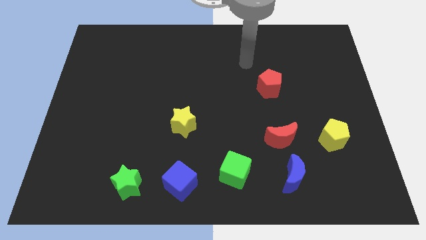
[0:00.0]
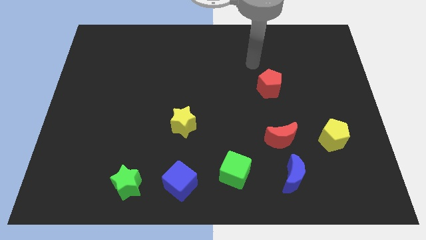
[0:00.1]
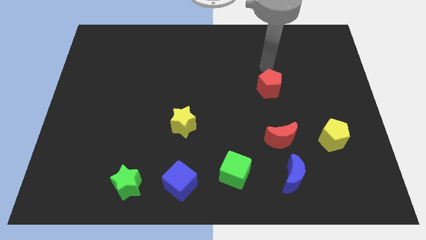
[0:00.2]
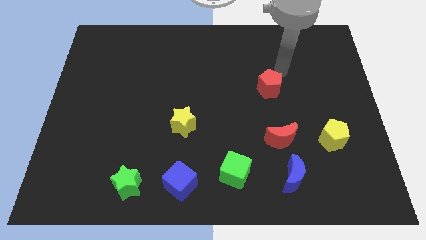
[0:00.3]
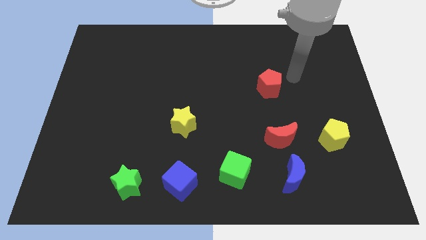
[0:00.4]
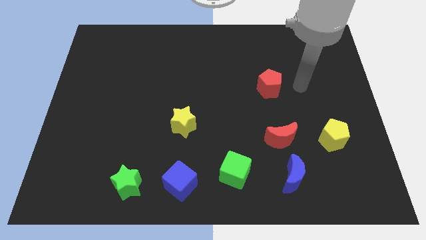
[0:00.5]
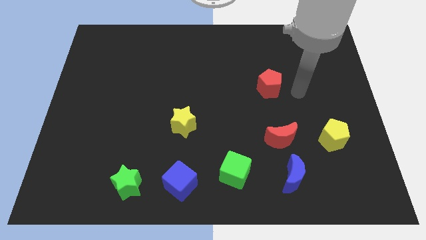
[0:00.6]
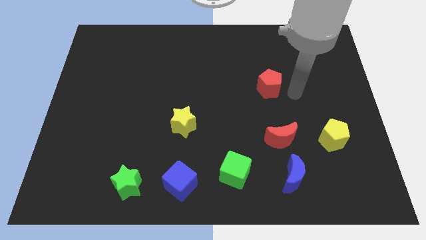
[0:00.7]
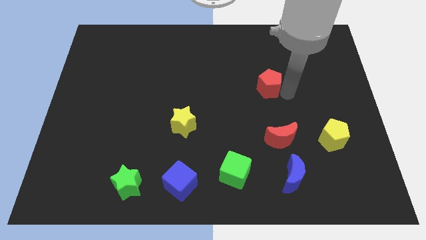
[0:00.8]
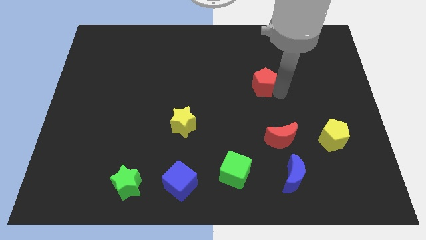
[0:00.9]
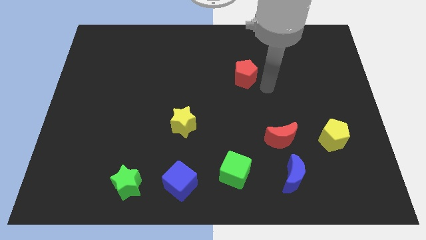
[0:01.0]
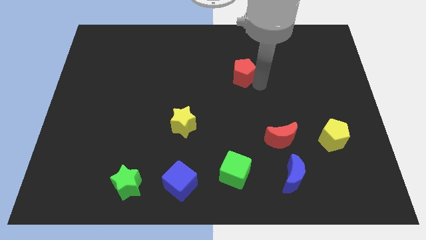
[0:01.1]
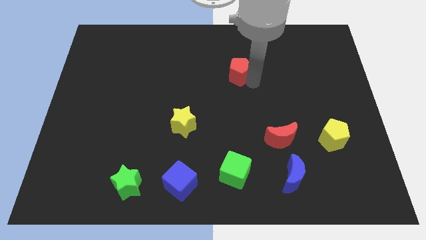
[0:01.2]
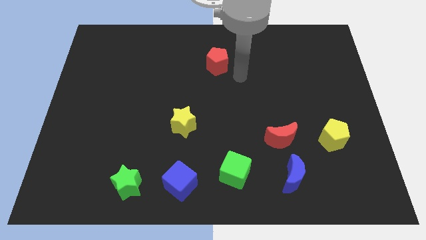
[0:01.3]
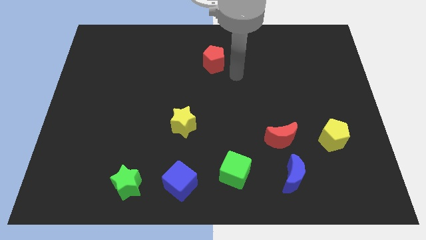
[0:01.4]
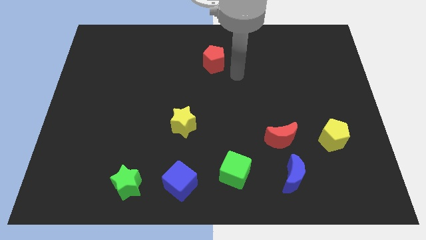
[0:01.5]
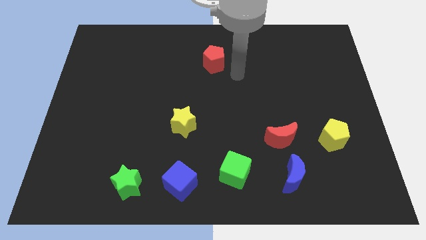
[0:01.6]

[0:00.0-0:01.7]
move the red pentagon towards the top center of the board

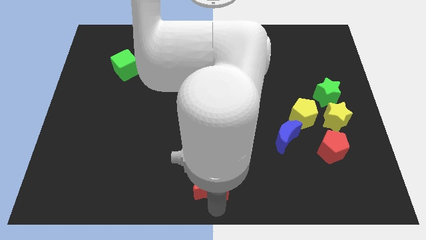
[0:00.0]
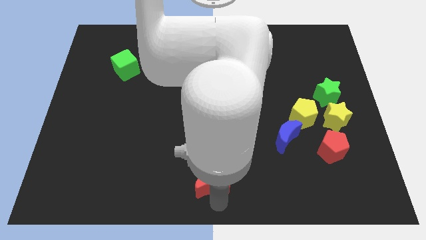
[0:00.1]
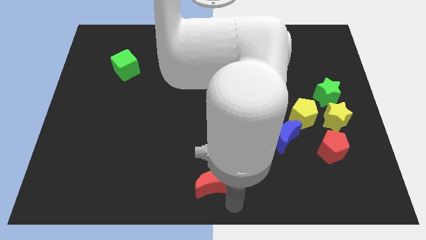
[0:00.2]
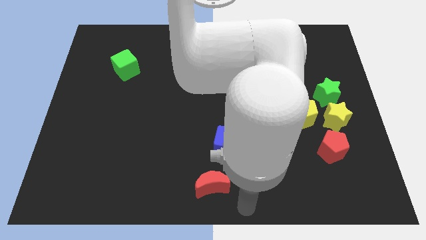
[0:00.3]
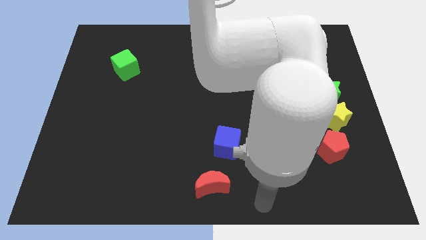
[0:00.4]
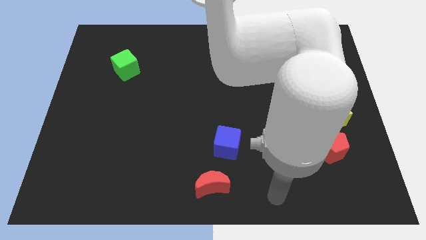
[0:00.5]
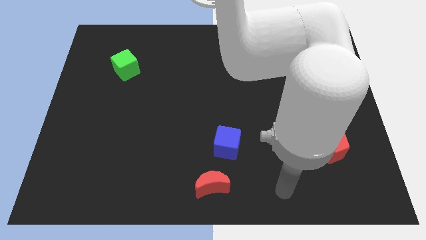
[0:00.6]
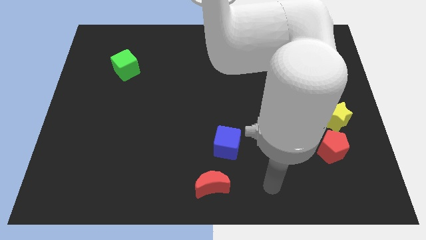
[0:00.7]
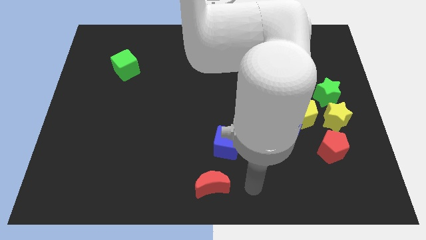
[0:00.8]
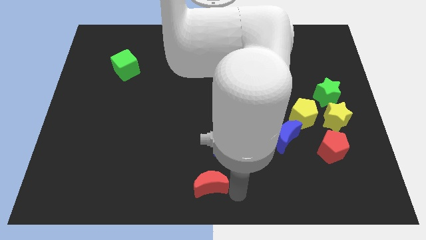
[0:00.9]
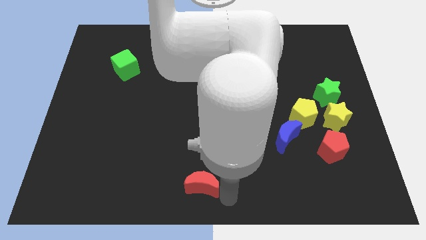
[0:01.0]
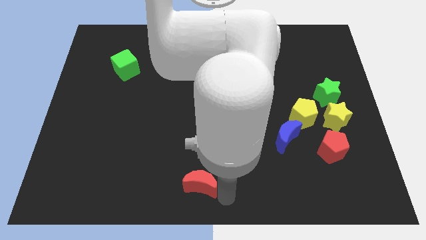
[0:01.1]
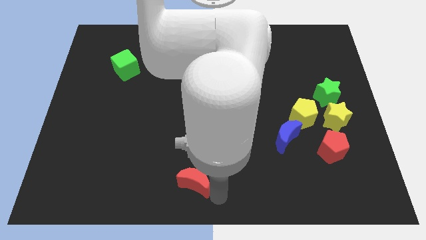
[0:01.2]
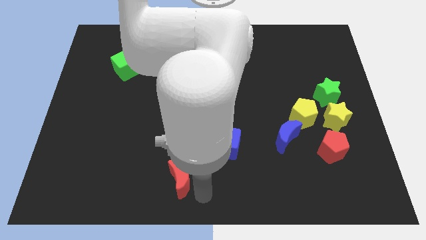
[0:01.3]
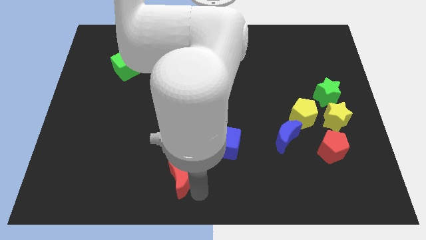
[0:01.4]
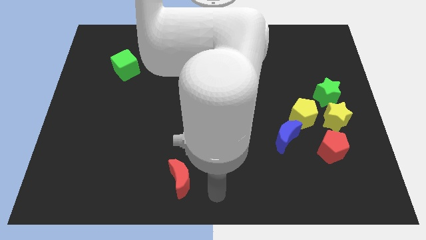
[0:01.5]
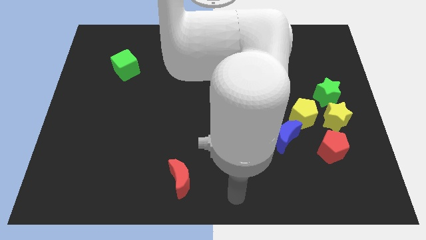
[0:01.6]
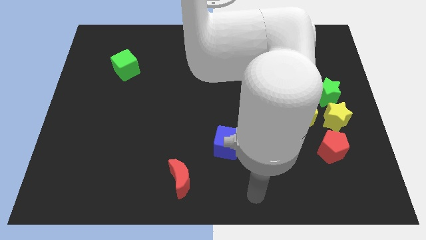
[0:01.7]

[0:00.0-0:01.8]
slide the red moon slightly to the left

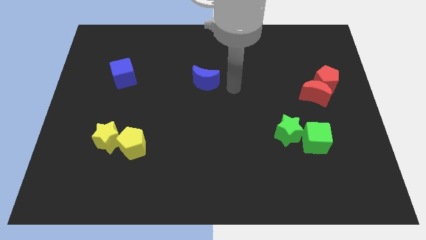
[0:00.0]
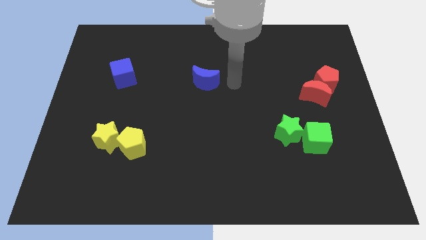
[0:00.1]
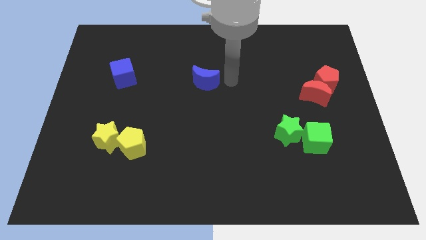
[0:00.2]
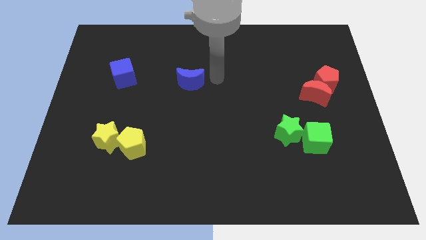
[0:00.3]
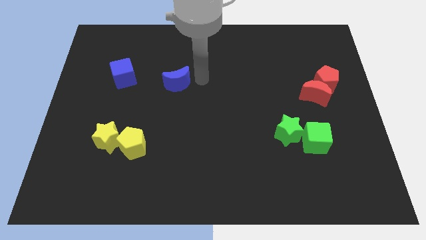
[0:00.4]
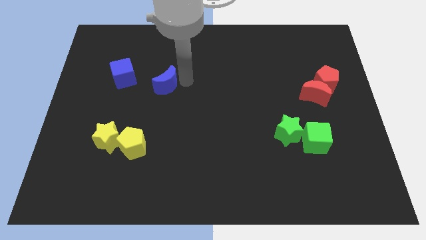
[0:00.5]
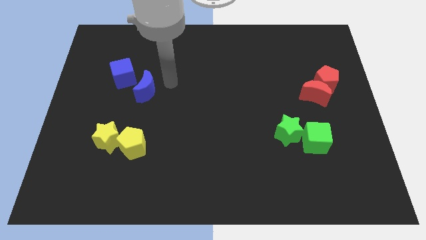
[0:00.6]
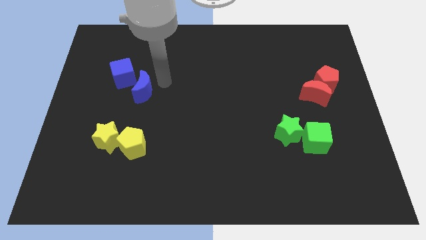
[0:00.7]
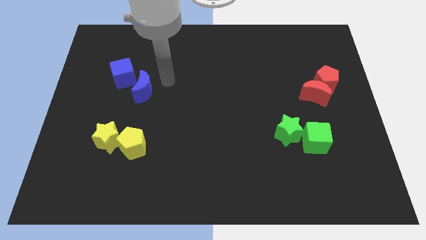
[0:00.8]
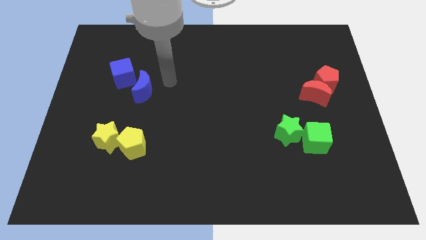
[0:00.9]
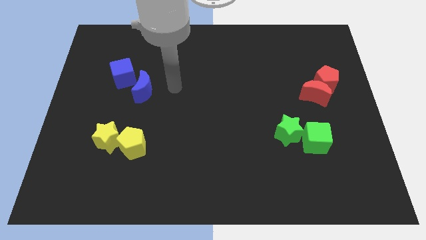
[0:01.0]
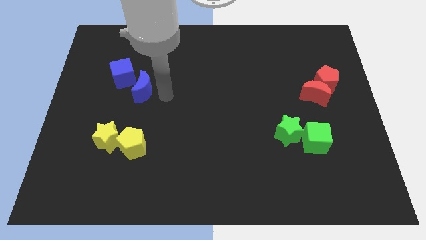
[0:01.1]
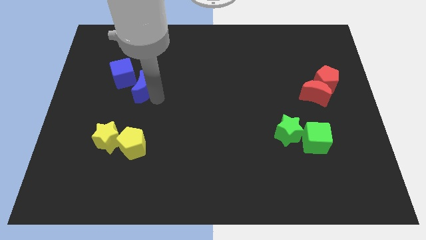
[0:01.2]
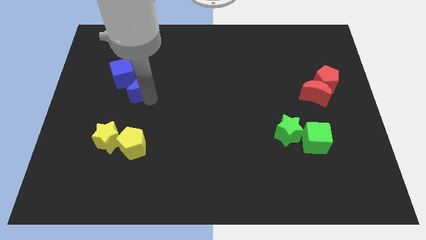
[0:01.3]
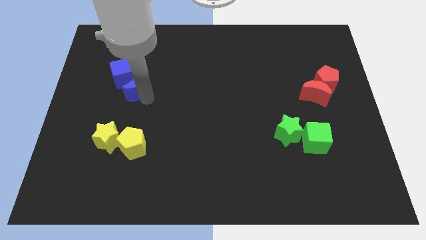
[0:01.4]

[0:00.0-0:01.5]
place the blue moon below the blue cube

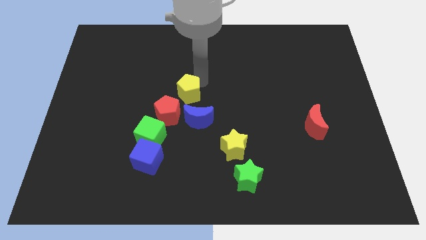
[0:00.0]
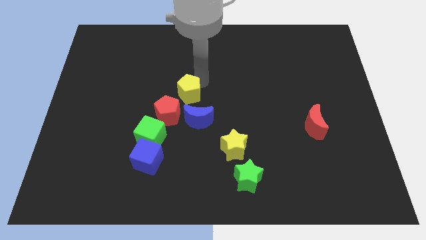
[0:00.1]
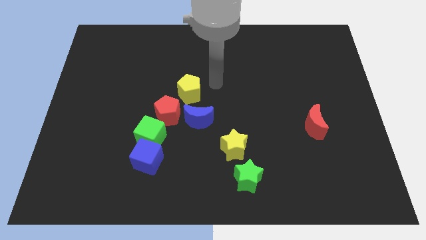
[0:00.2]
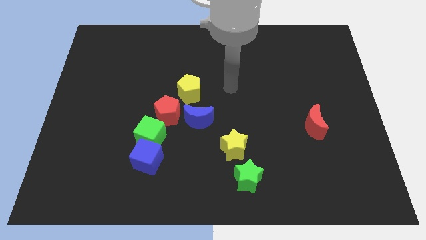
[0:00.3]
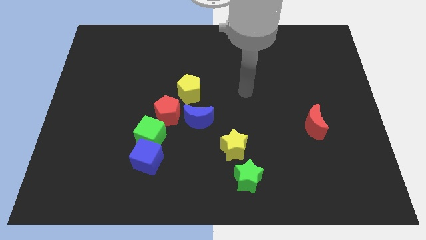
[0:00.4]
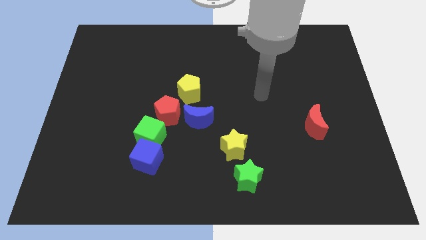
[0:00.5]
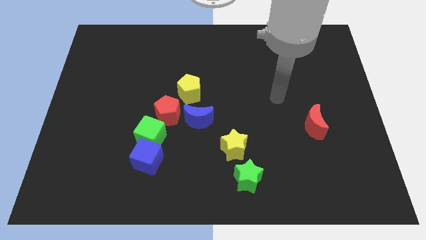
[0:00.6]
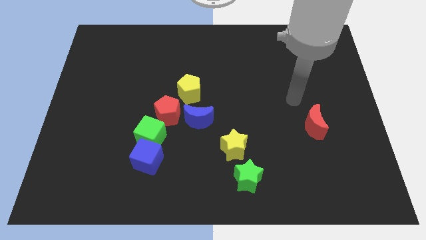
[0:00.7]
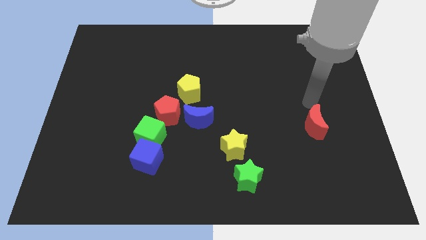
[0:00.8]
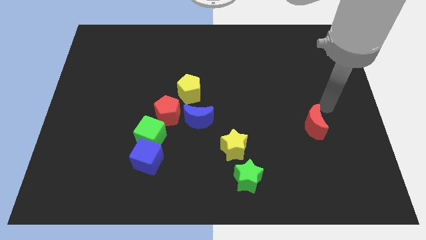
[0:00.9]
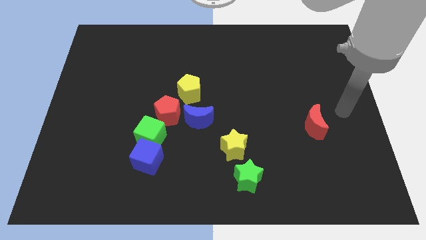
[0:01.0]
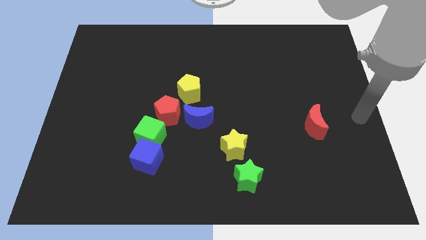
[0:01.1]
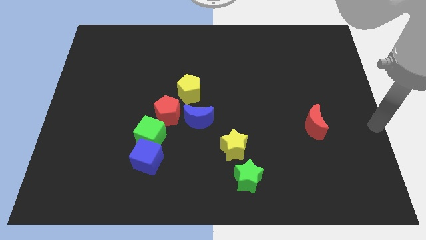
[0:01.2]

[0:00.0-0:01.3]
point your arm at the right side of the red crescent

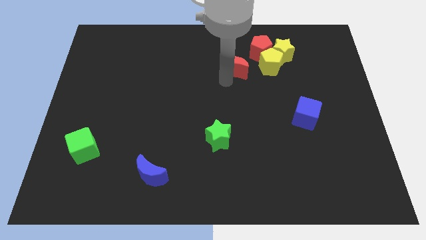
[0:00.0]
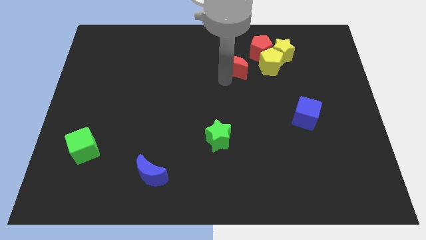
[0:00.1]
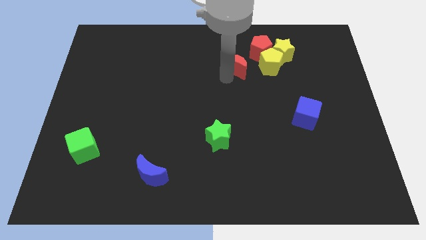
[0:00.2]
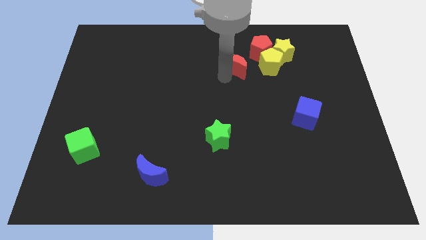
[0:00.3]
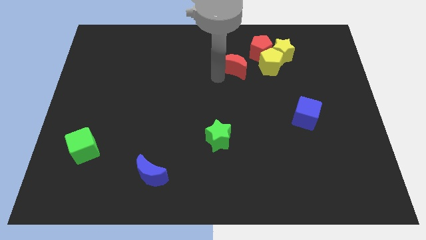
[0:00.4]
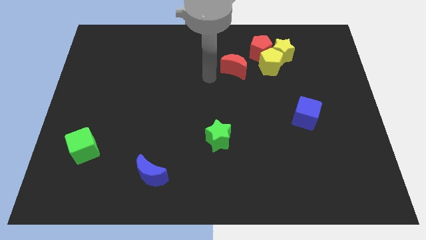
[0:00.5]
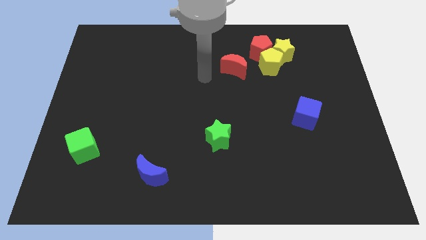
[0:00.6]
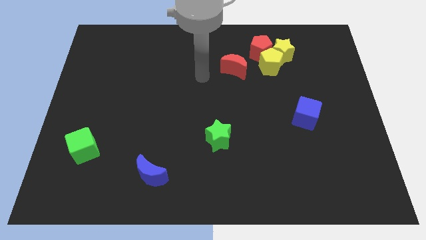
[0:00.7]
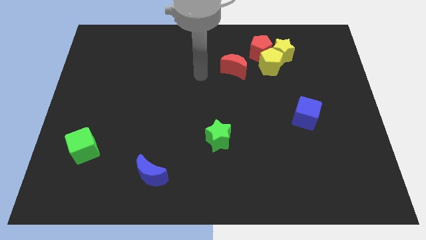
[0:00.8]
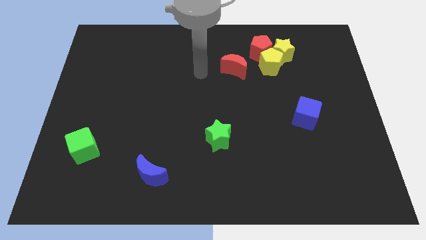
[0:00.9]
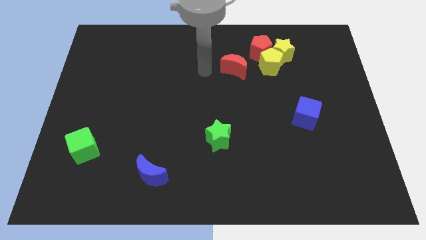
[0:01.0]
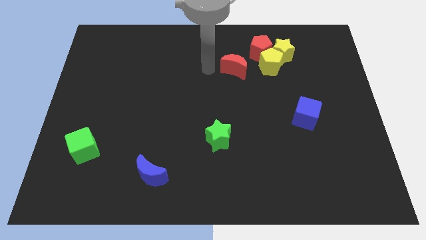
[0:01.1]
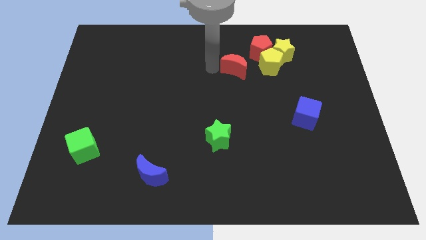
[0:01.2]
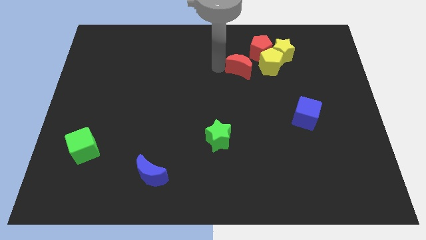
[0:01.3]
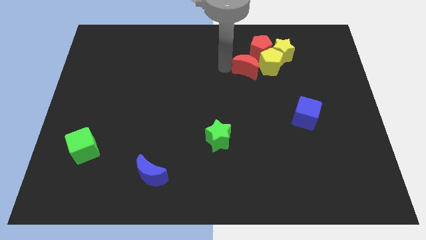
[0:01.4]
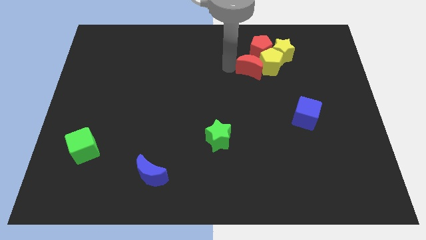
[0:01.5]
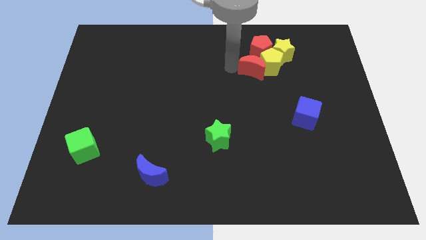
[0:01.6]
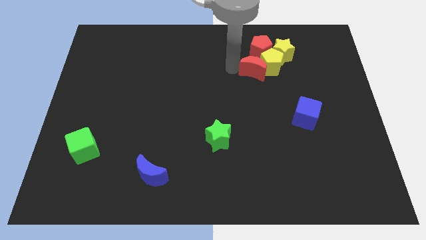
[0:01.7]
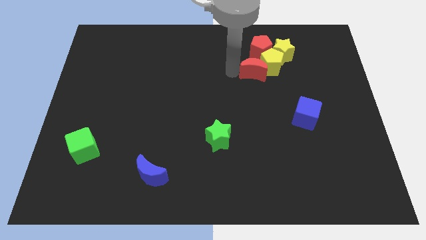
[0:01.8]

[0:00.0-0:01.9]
push the red crescent into the yellow pentagon

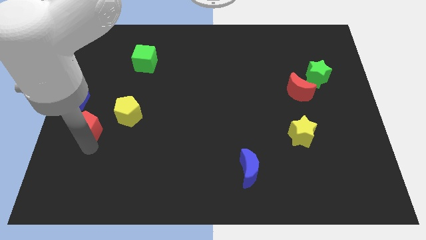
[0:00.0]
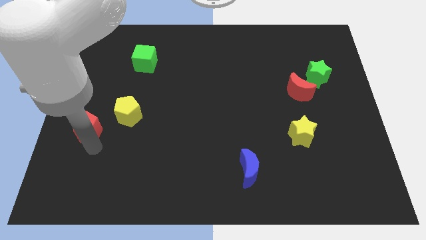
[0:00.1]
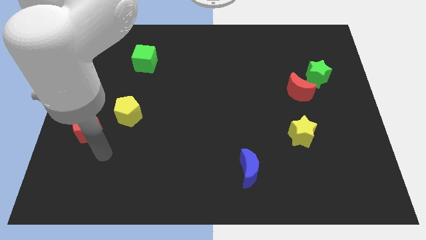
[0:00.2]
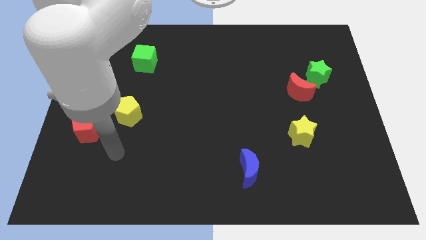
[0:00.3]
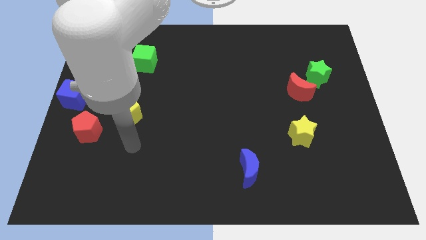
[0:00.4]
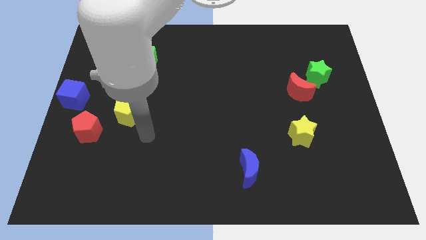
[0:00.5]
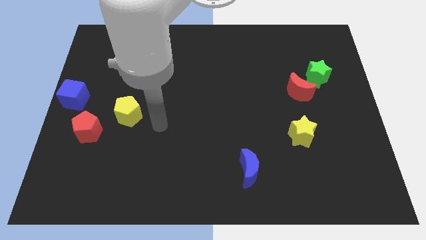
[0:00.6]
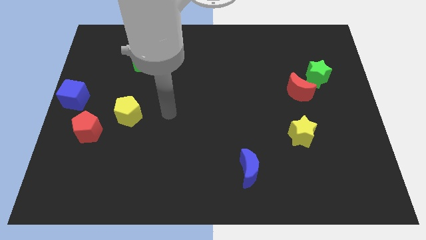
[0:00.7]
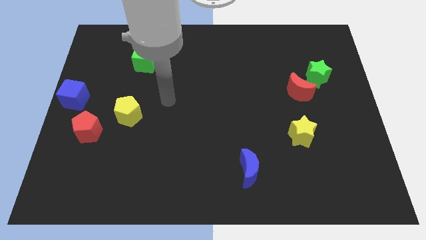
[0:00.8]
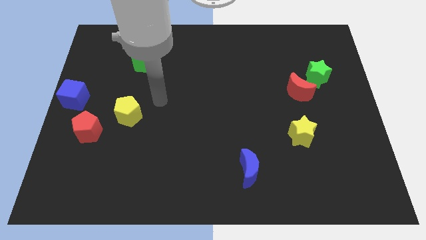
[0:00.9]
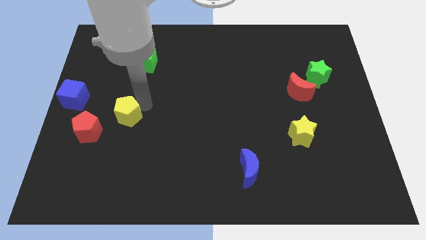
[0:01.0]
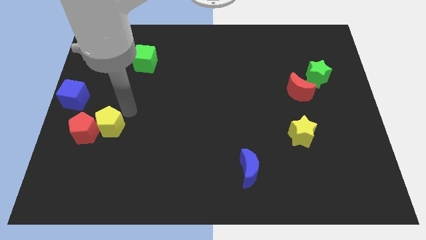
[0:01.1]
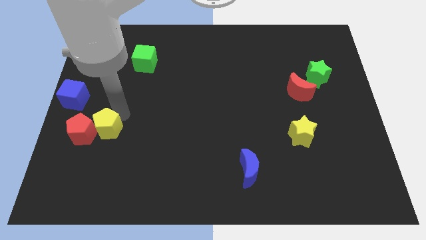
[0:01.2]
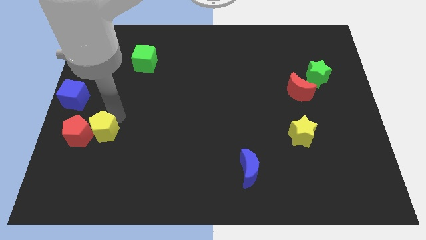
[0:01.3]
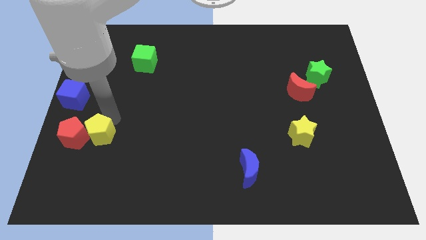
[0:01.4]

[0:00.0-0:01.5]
move your arm away from the red pentagon
